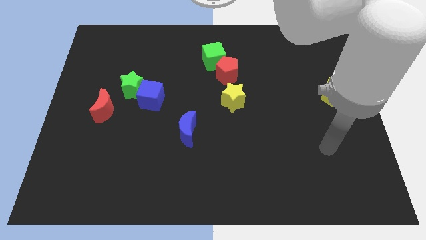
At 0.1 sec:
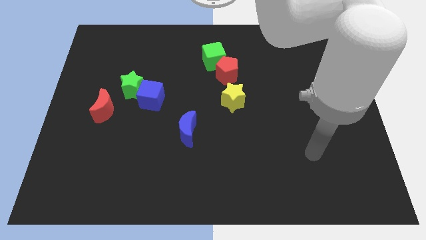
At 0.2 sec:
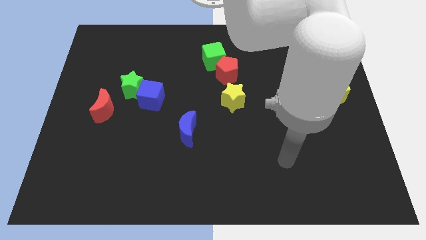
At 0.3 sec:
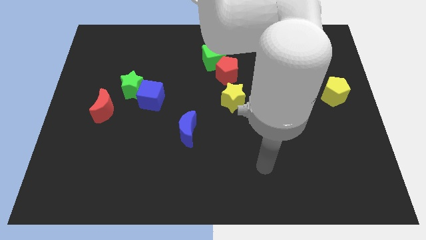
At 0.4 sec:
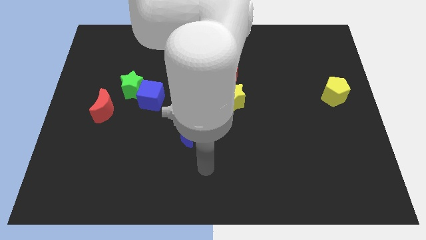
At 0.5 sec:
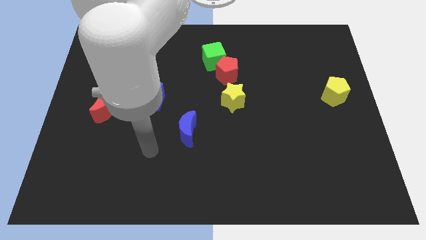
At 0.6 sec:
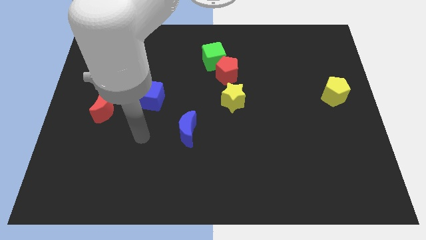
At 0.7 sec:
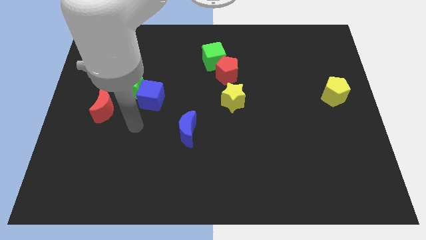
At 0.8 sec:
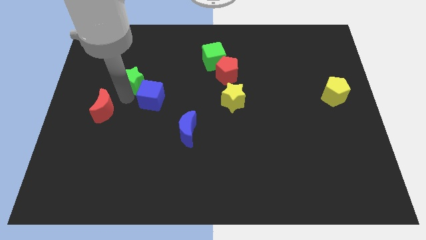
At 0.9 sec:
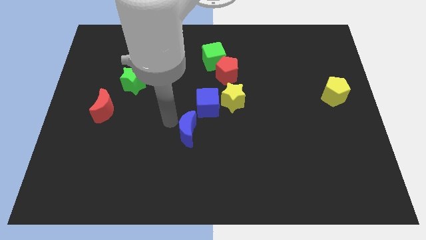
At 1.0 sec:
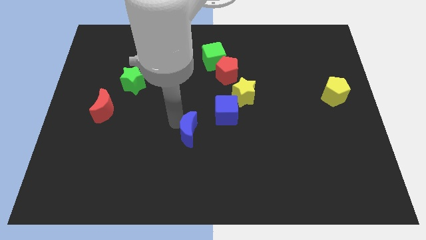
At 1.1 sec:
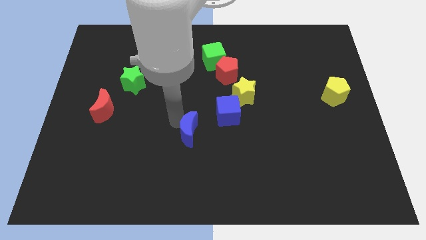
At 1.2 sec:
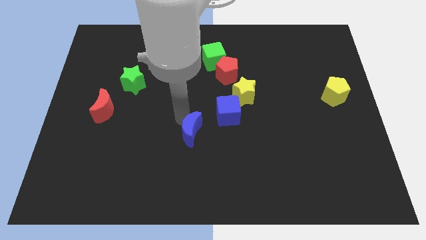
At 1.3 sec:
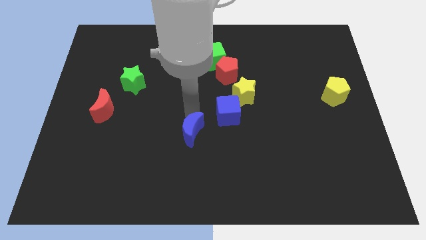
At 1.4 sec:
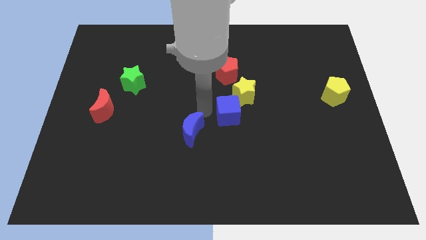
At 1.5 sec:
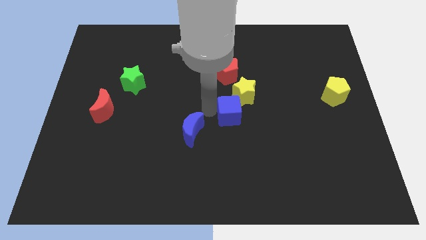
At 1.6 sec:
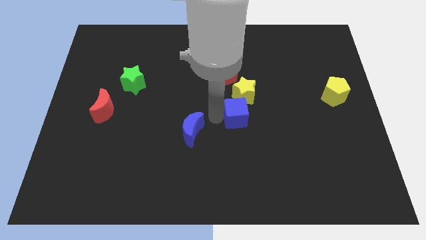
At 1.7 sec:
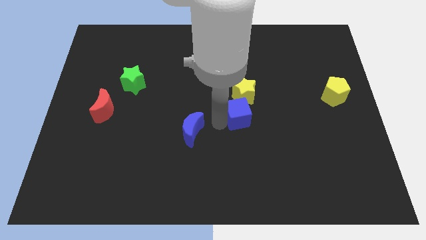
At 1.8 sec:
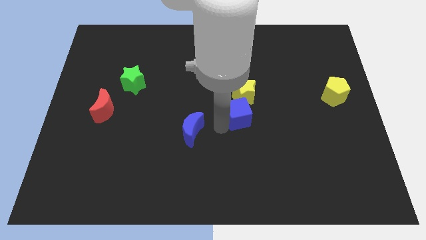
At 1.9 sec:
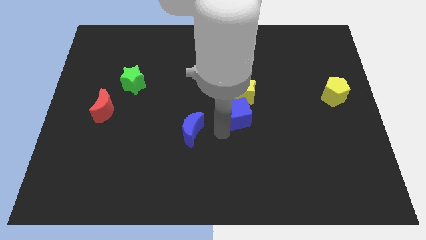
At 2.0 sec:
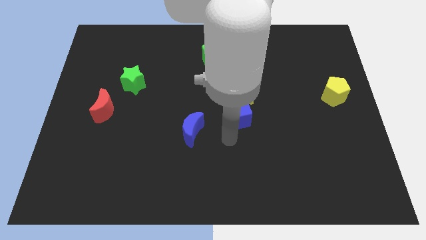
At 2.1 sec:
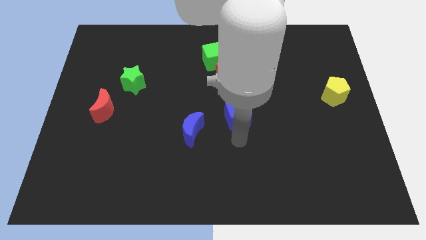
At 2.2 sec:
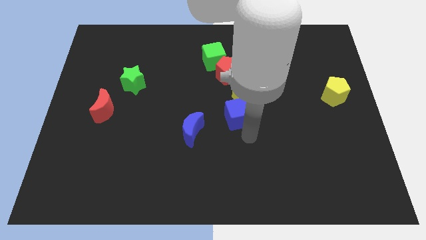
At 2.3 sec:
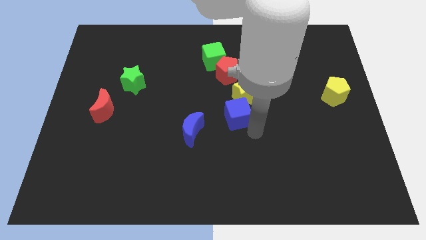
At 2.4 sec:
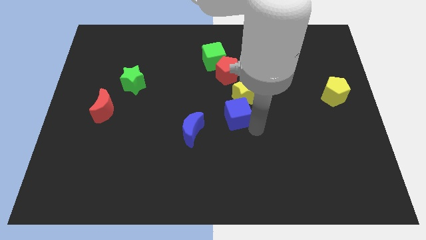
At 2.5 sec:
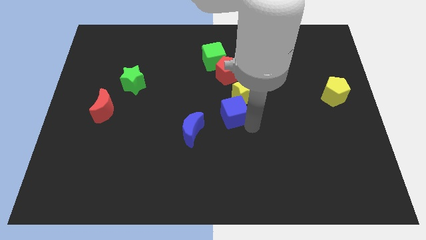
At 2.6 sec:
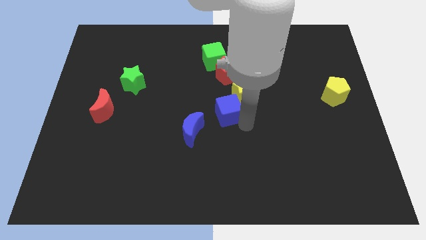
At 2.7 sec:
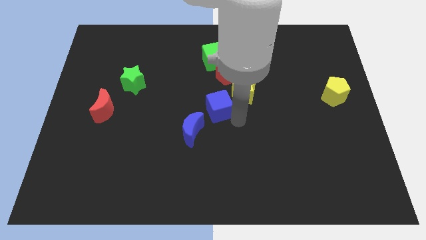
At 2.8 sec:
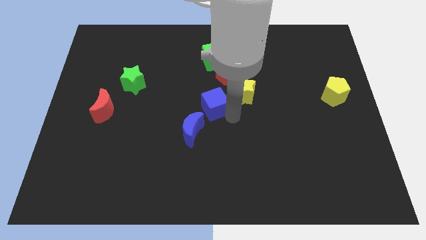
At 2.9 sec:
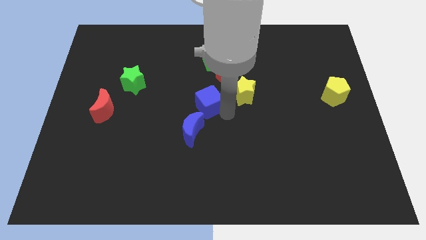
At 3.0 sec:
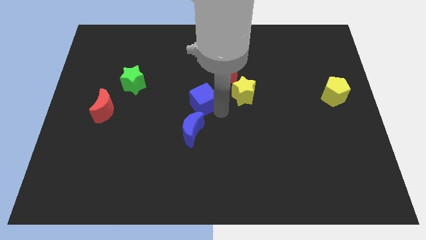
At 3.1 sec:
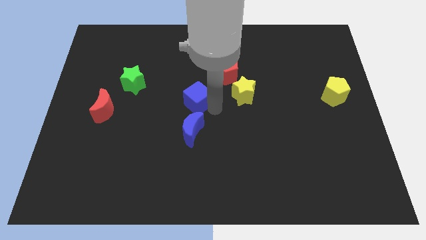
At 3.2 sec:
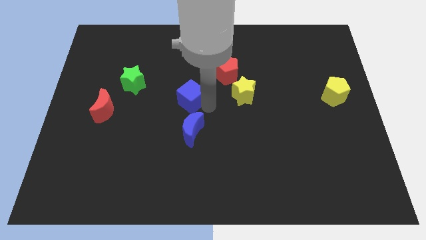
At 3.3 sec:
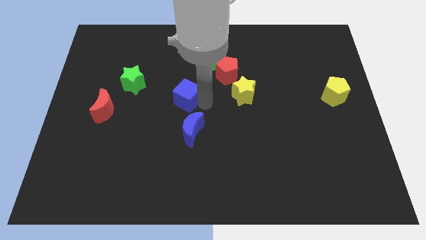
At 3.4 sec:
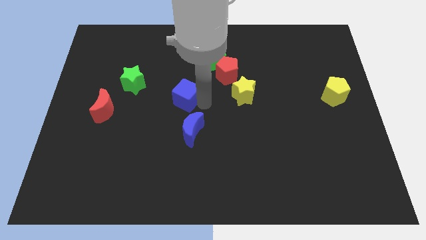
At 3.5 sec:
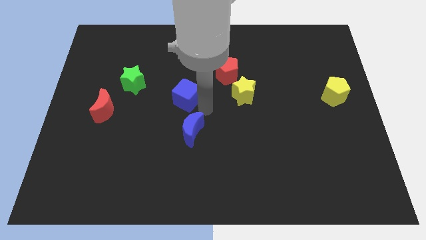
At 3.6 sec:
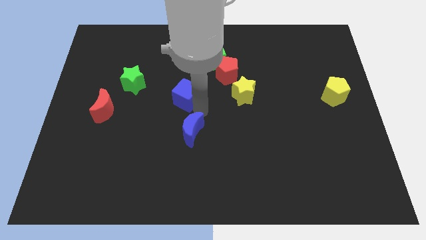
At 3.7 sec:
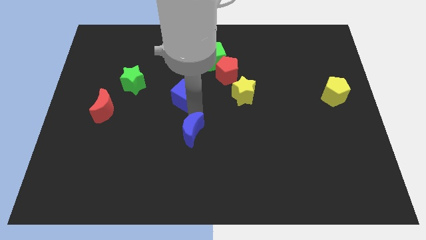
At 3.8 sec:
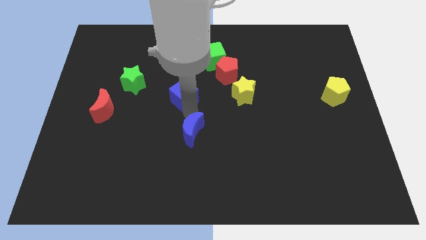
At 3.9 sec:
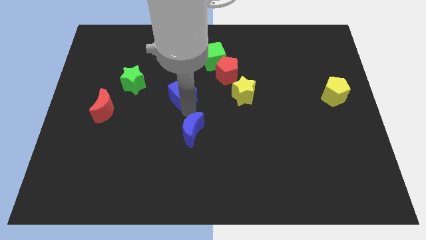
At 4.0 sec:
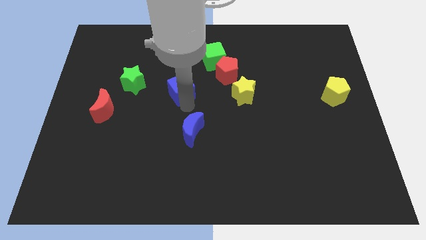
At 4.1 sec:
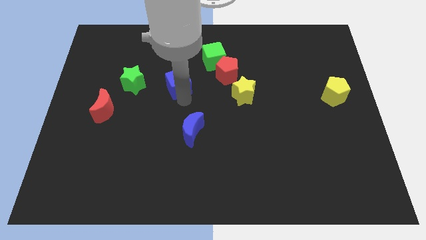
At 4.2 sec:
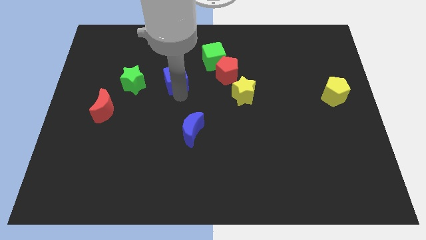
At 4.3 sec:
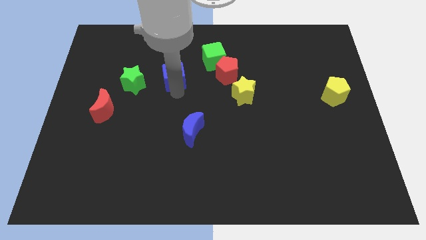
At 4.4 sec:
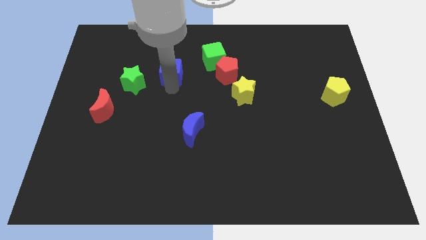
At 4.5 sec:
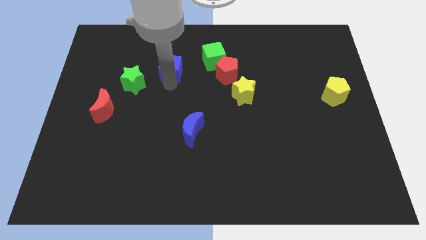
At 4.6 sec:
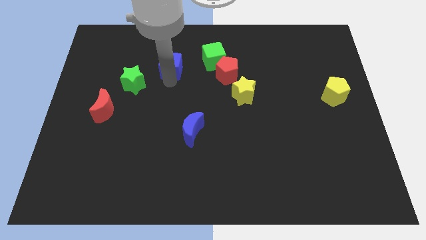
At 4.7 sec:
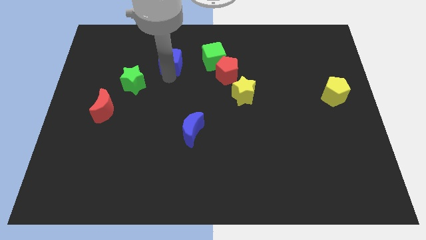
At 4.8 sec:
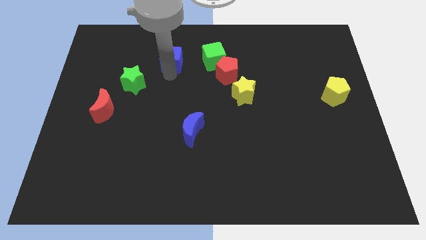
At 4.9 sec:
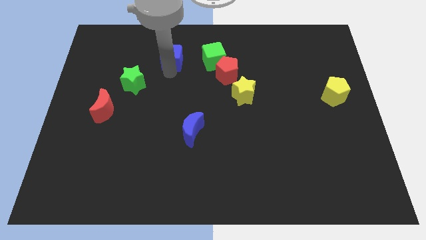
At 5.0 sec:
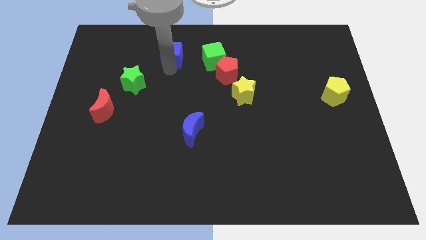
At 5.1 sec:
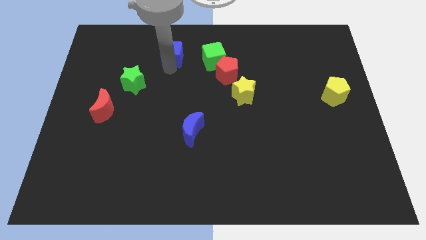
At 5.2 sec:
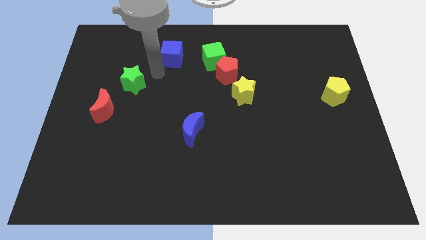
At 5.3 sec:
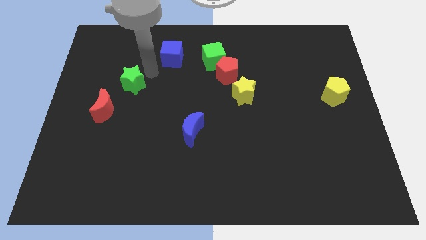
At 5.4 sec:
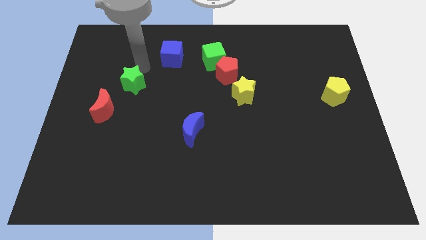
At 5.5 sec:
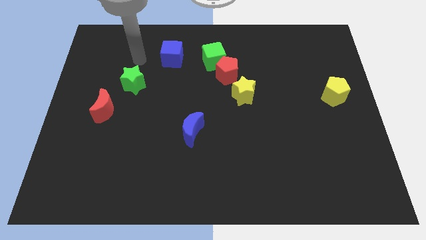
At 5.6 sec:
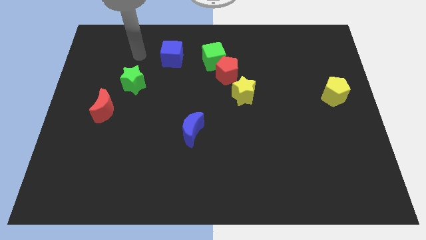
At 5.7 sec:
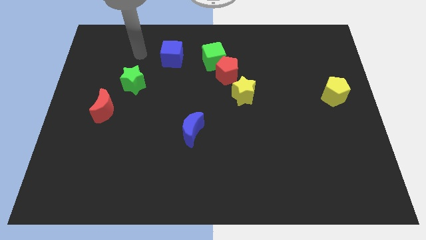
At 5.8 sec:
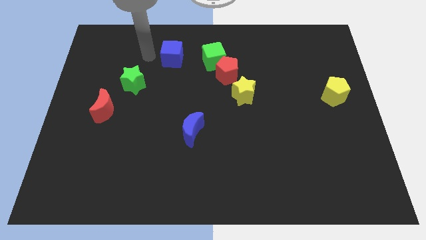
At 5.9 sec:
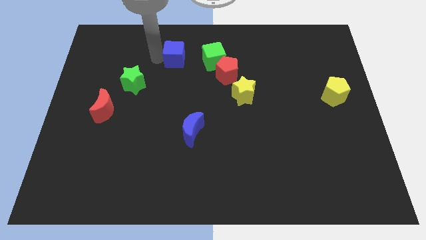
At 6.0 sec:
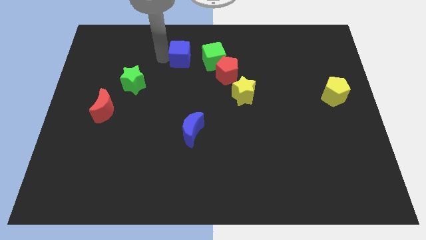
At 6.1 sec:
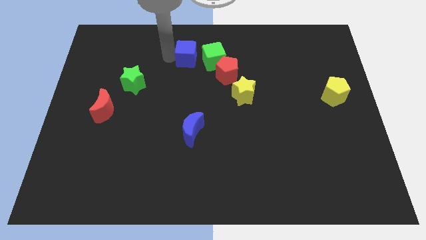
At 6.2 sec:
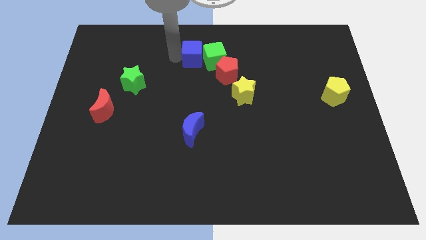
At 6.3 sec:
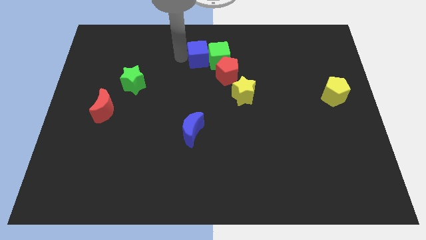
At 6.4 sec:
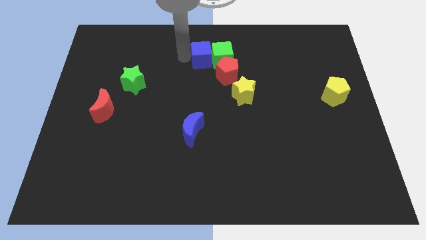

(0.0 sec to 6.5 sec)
put the blue cube next to the green cube

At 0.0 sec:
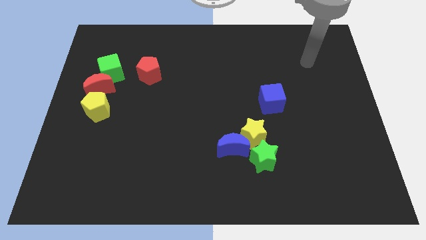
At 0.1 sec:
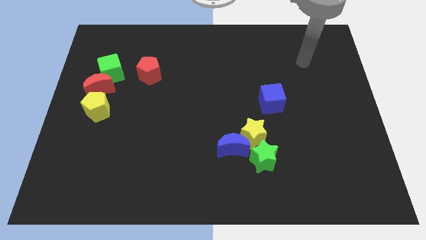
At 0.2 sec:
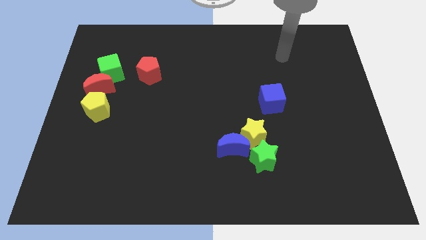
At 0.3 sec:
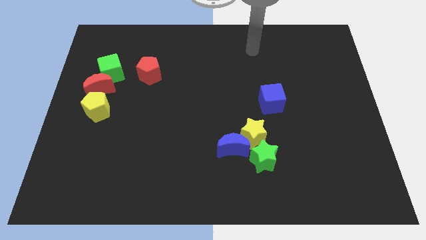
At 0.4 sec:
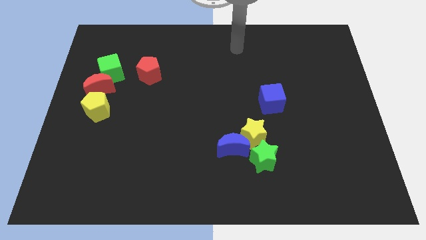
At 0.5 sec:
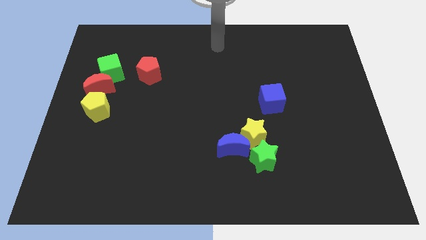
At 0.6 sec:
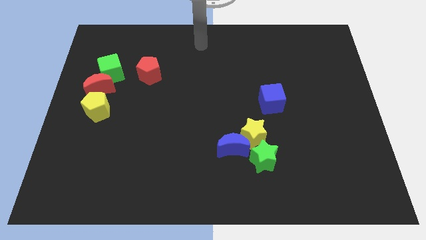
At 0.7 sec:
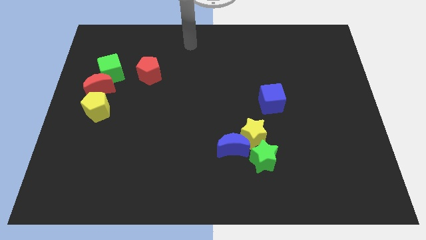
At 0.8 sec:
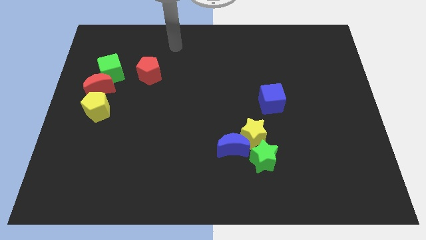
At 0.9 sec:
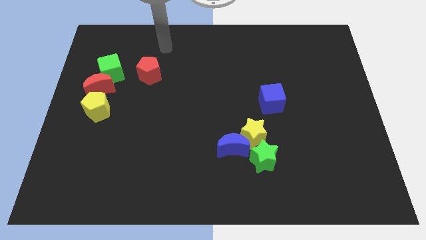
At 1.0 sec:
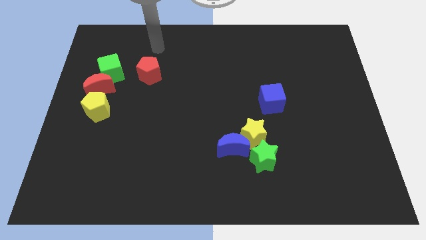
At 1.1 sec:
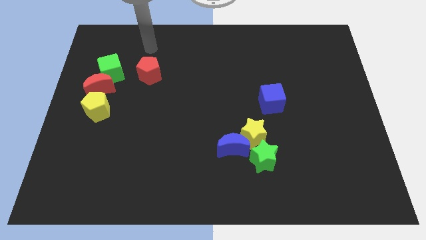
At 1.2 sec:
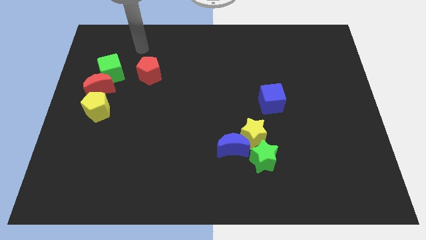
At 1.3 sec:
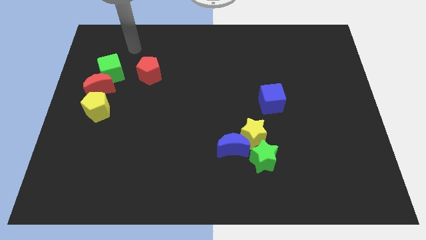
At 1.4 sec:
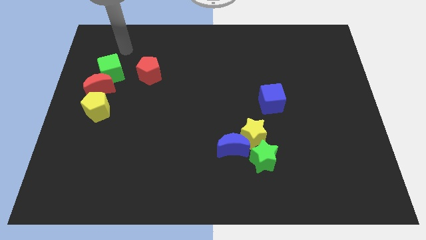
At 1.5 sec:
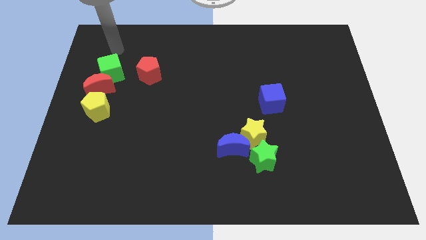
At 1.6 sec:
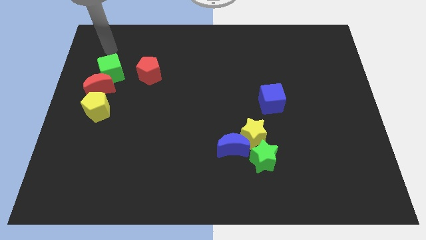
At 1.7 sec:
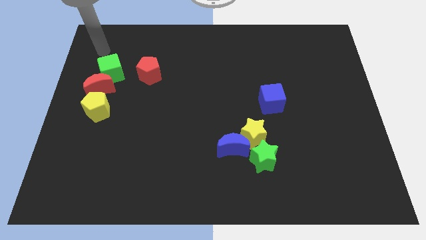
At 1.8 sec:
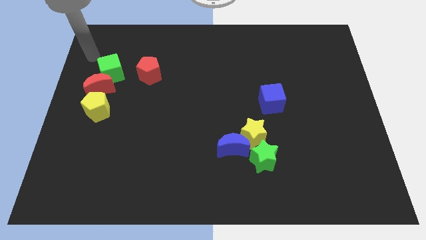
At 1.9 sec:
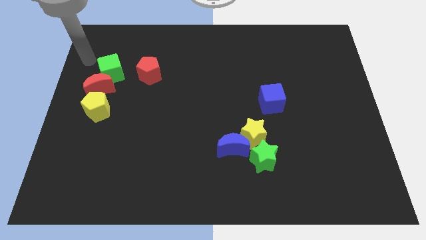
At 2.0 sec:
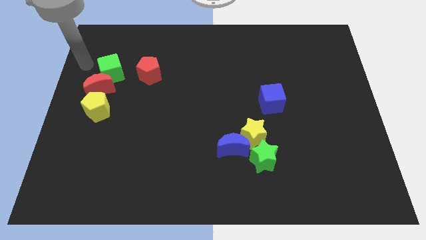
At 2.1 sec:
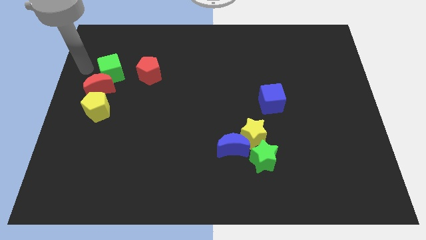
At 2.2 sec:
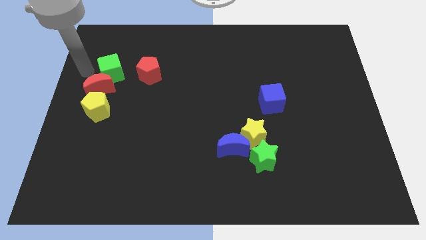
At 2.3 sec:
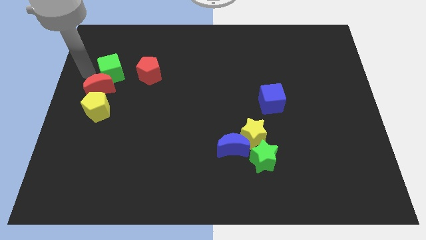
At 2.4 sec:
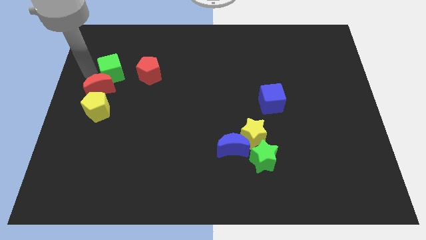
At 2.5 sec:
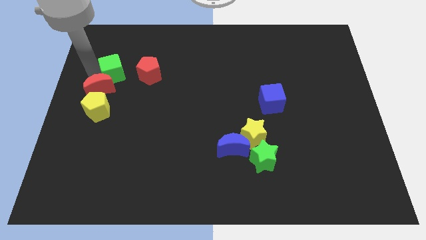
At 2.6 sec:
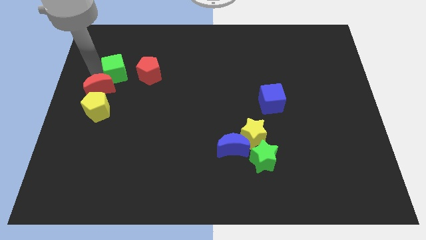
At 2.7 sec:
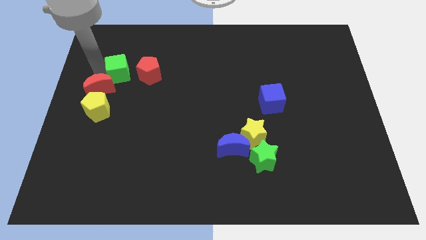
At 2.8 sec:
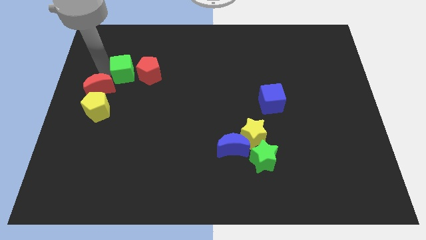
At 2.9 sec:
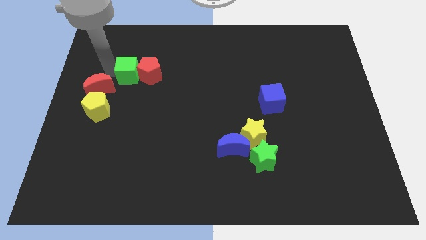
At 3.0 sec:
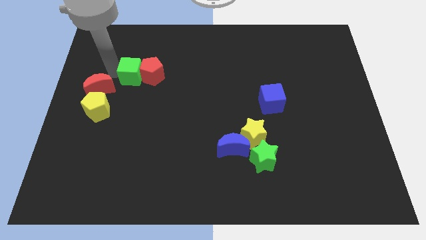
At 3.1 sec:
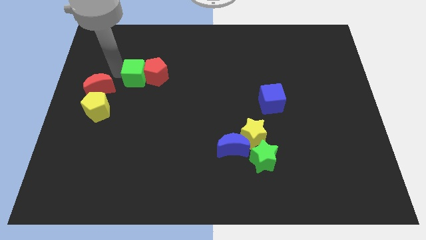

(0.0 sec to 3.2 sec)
slide the green cube next to the red pentagon
